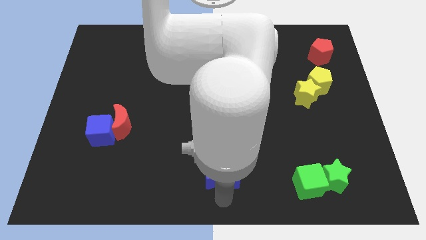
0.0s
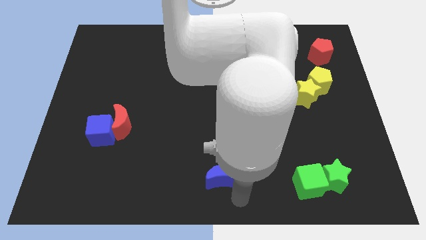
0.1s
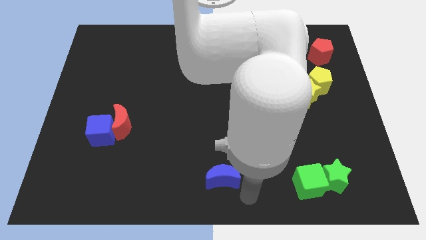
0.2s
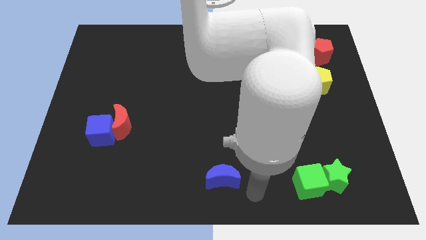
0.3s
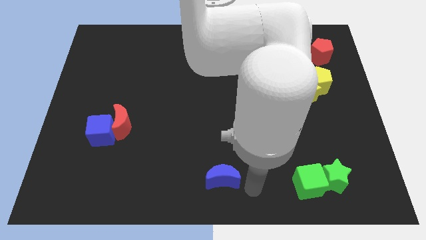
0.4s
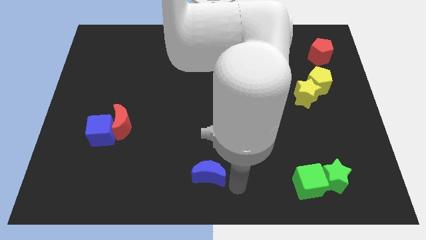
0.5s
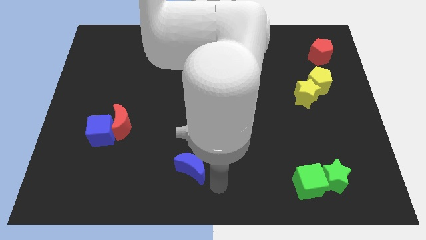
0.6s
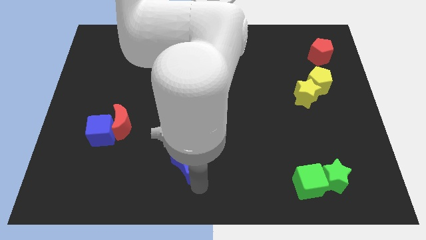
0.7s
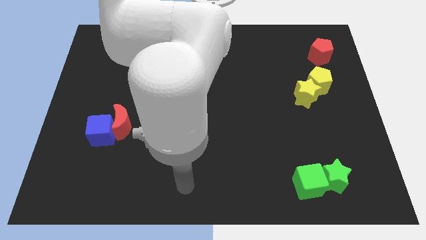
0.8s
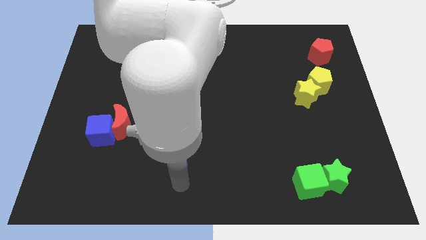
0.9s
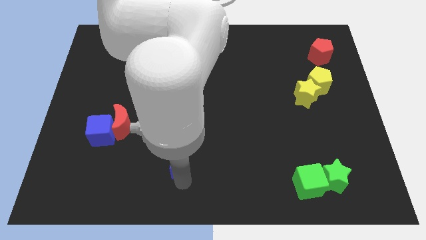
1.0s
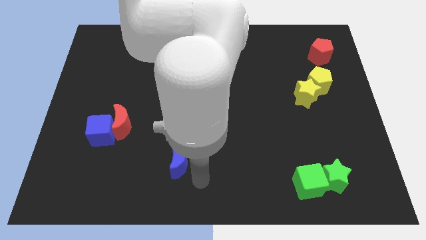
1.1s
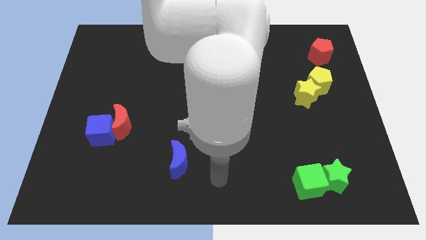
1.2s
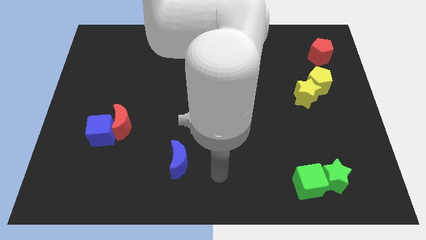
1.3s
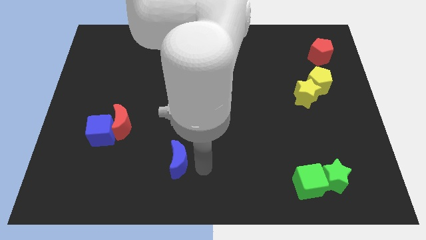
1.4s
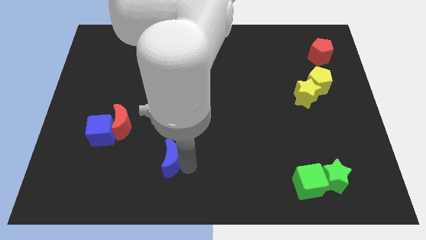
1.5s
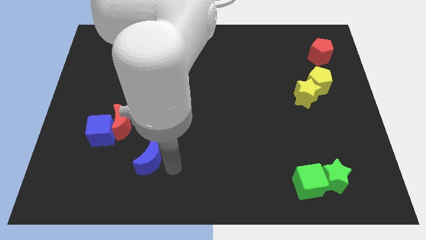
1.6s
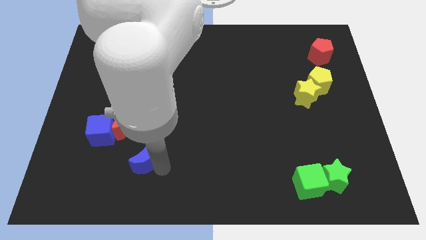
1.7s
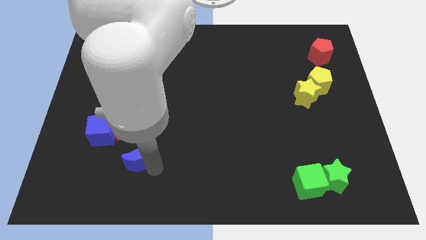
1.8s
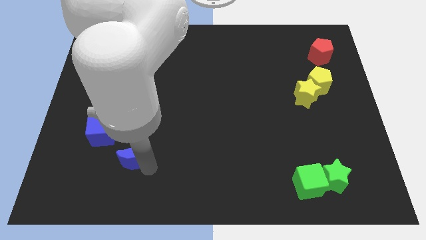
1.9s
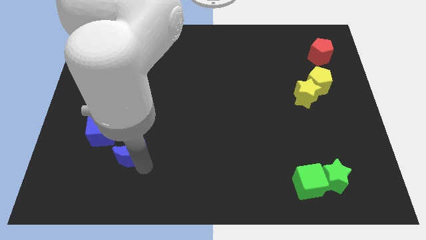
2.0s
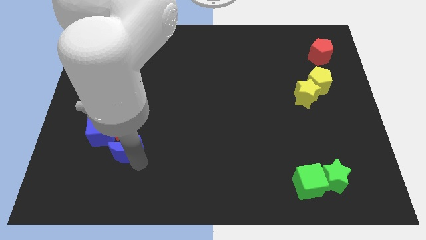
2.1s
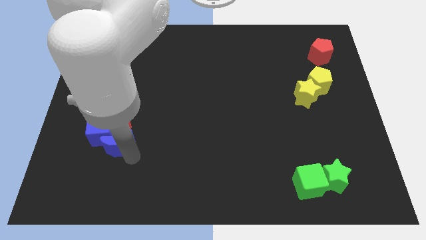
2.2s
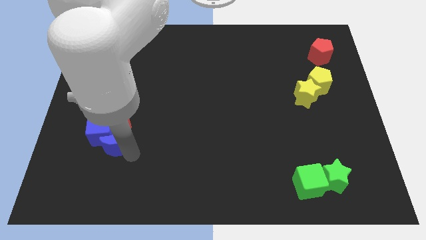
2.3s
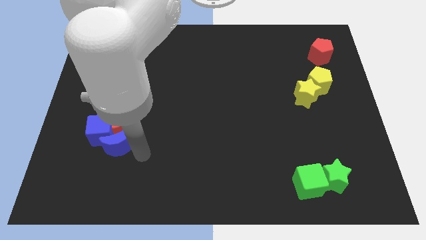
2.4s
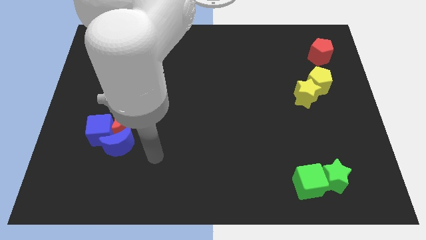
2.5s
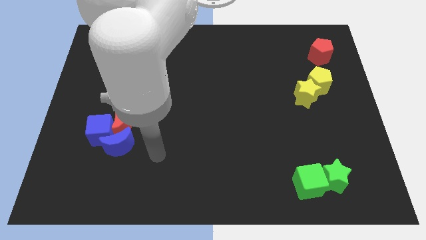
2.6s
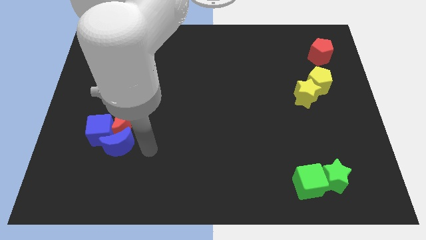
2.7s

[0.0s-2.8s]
push the blue moon into the red moon and blue cube

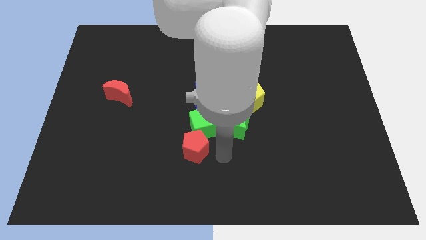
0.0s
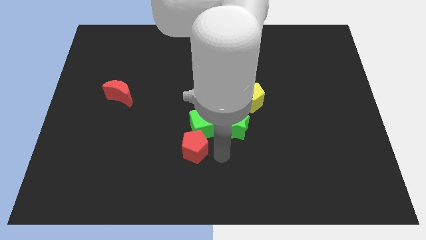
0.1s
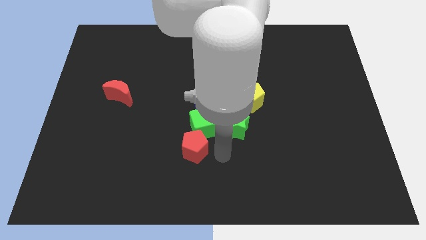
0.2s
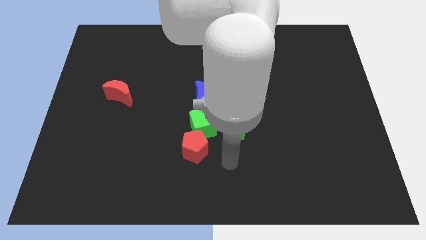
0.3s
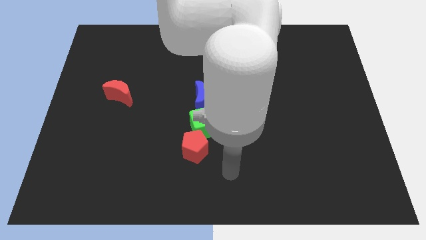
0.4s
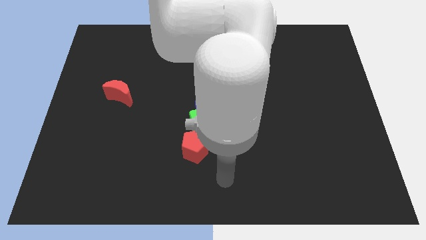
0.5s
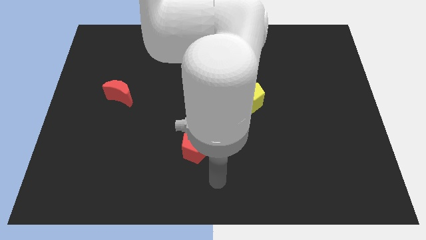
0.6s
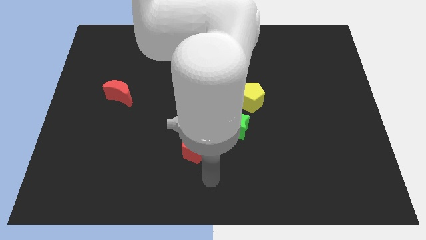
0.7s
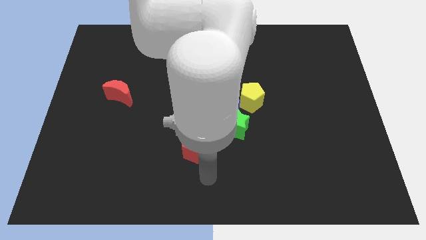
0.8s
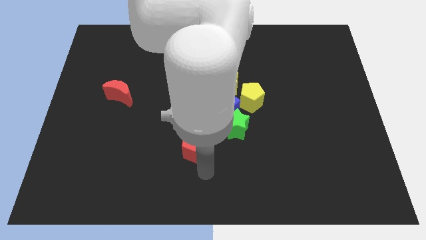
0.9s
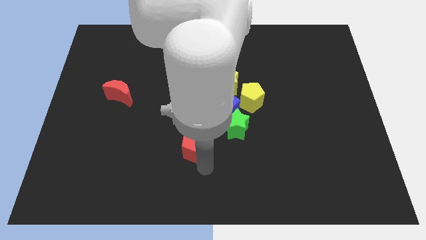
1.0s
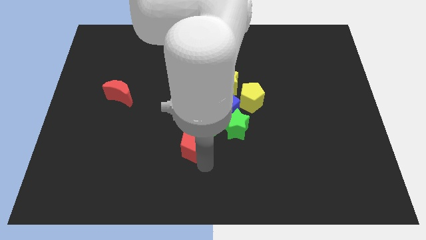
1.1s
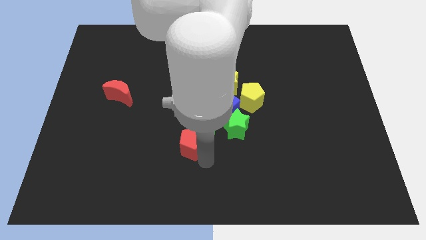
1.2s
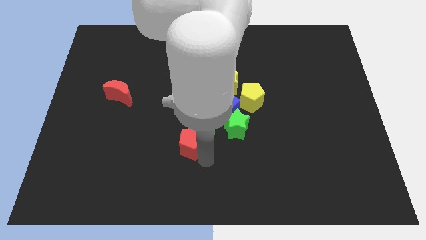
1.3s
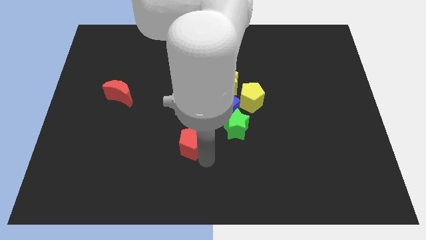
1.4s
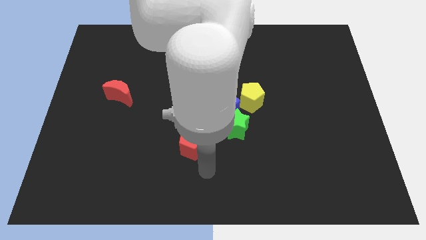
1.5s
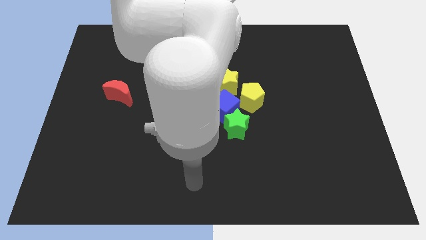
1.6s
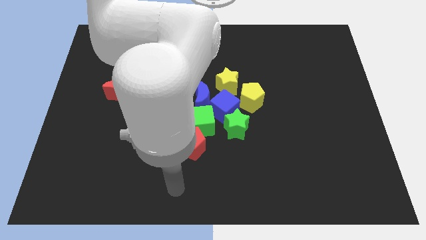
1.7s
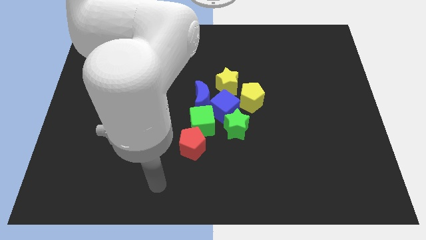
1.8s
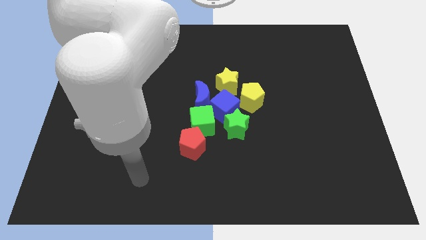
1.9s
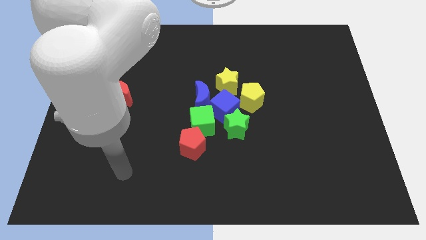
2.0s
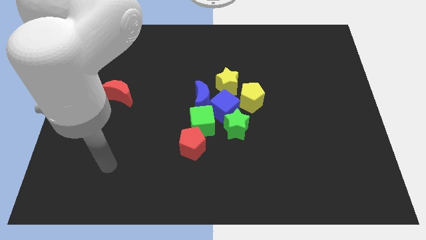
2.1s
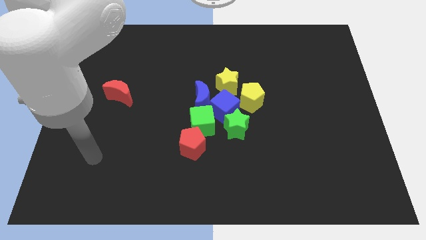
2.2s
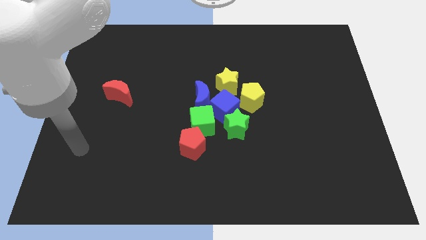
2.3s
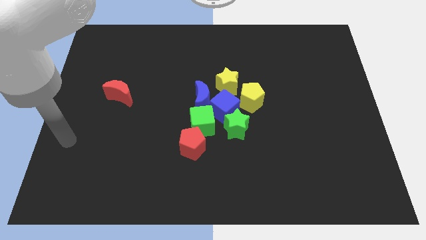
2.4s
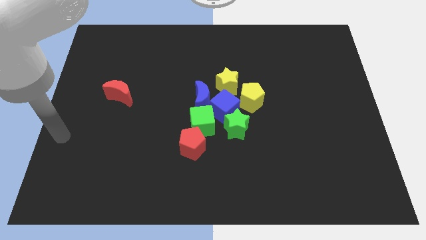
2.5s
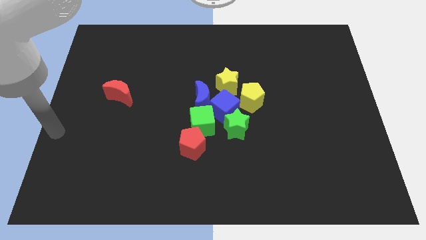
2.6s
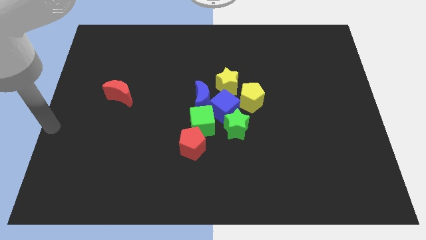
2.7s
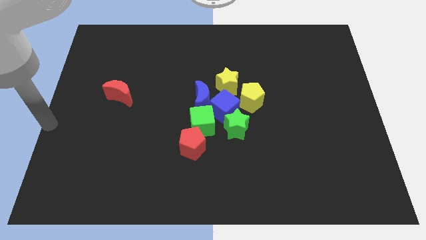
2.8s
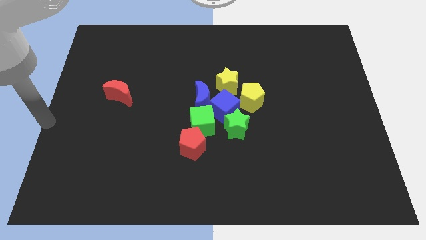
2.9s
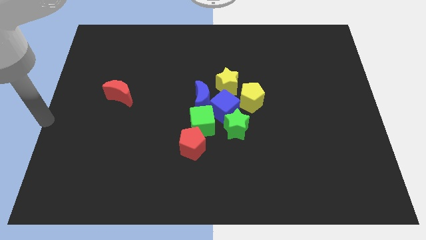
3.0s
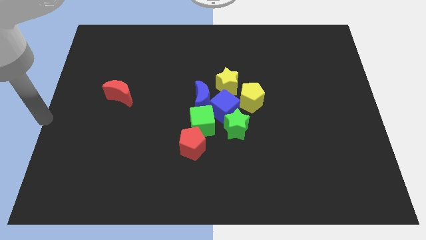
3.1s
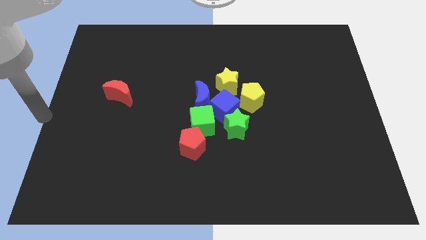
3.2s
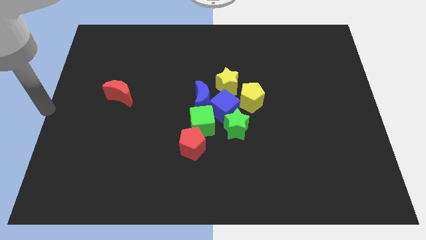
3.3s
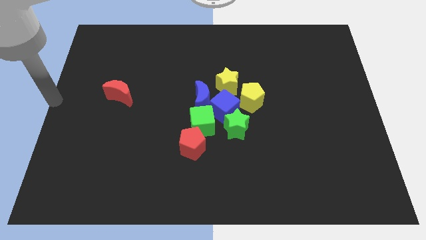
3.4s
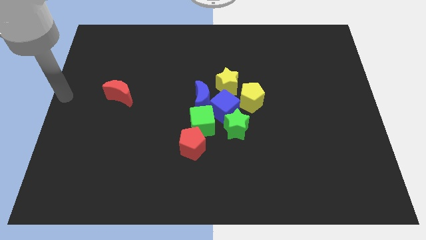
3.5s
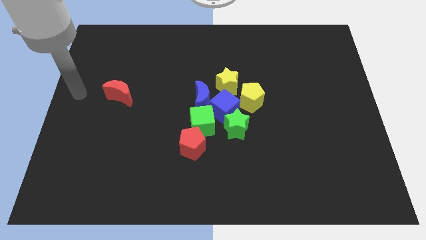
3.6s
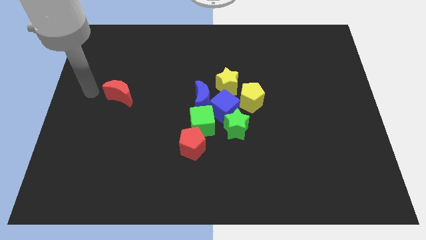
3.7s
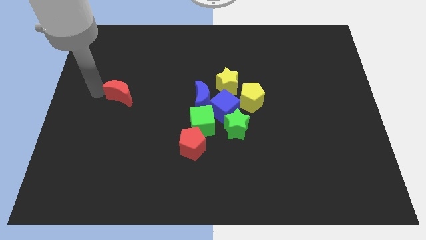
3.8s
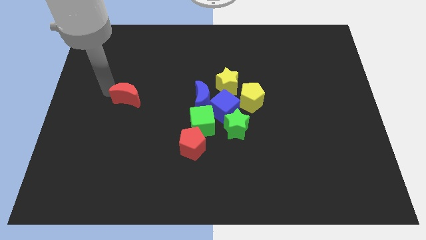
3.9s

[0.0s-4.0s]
place your arm left to red moon

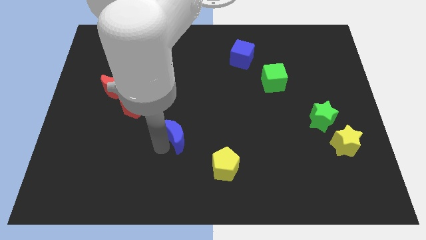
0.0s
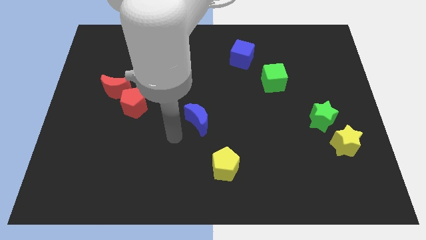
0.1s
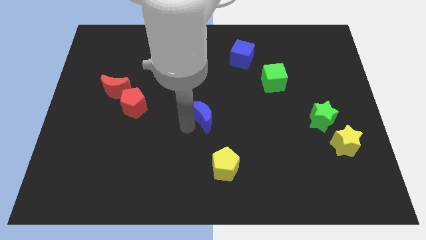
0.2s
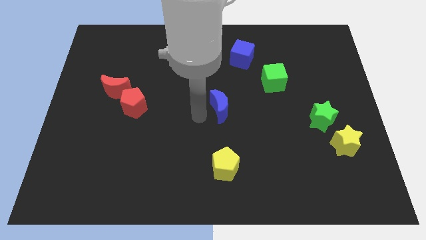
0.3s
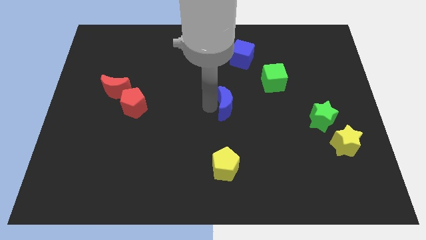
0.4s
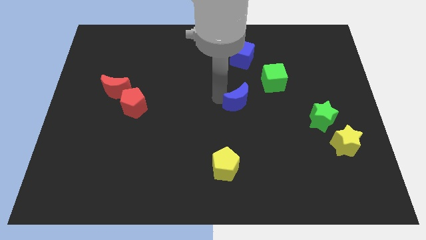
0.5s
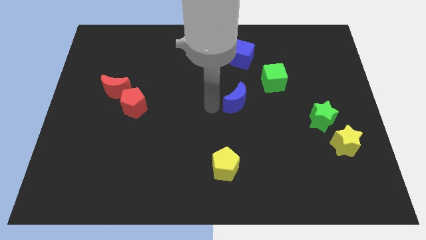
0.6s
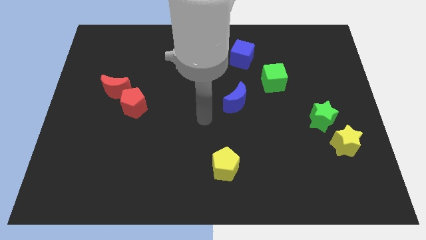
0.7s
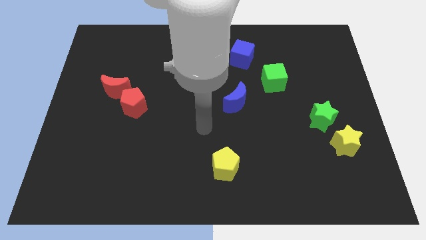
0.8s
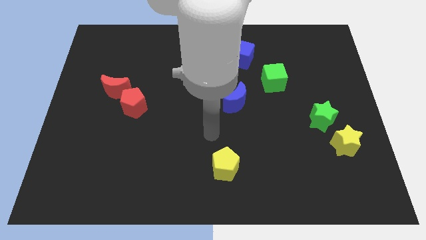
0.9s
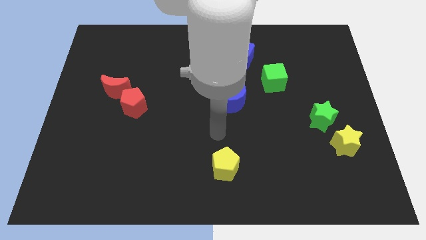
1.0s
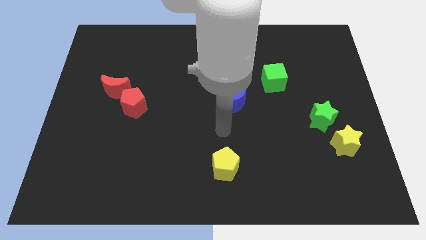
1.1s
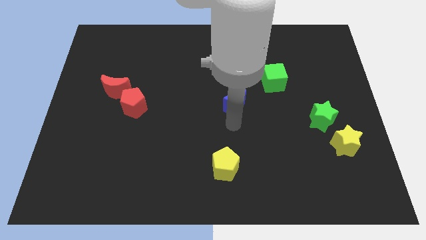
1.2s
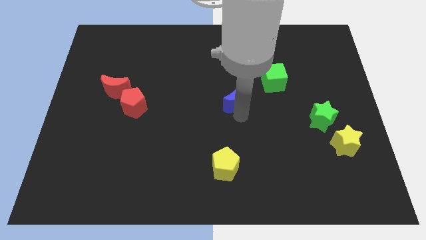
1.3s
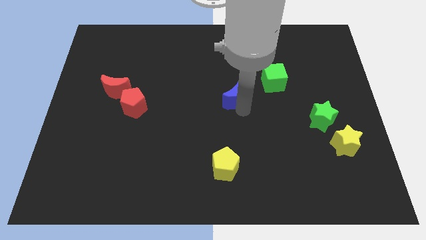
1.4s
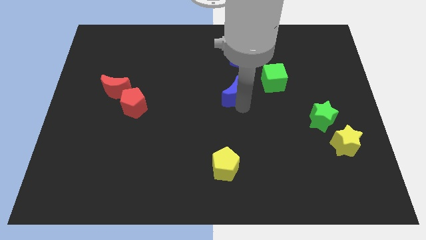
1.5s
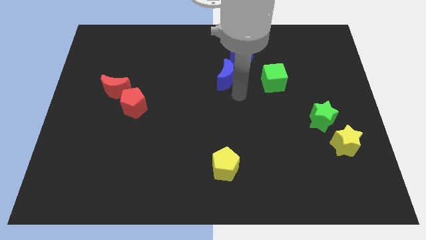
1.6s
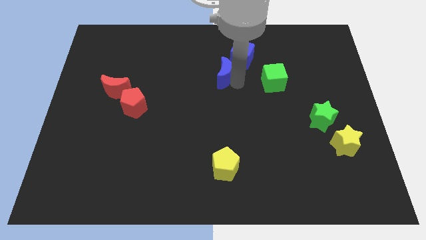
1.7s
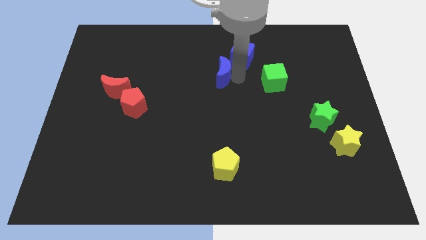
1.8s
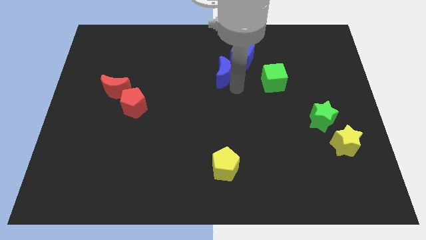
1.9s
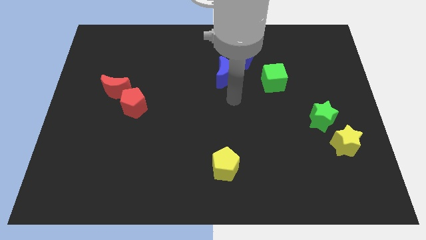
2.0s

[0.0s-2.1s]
push the blue crescent to the left of the blue cube

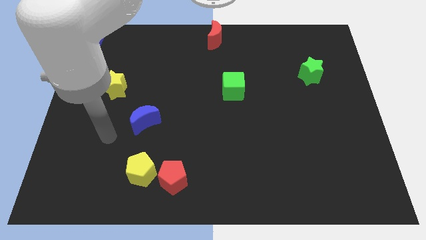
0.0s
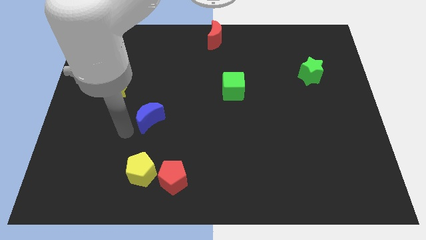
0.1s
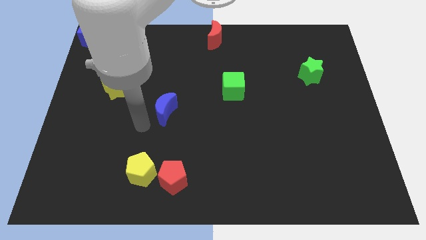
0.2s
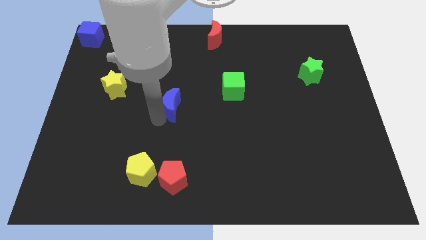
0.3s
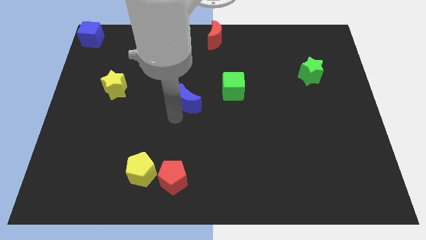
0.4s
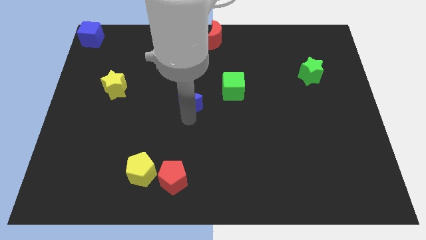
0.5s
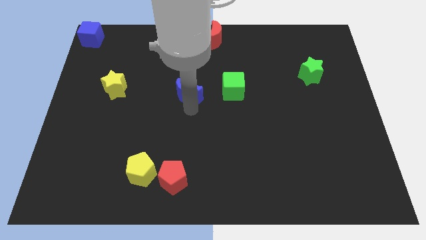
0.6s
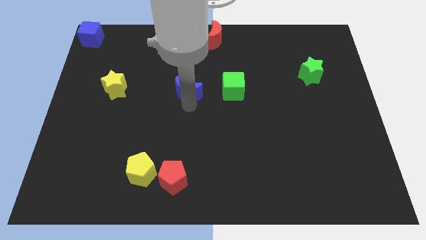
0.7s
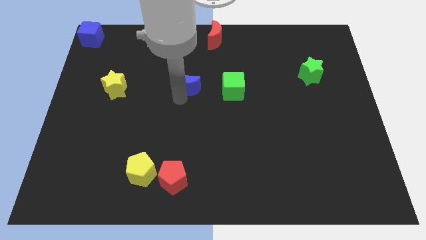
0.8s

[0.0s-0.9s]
place the blue crescent to the left side of green cube
